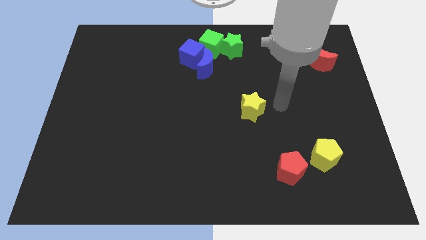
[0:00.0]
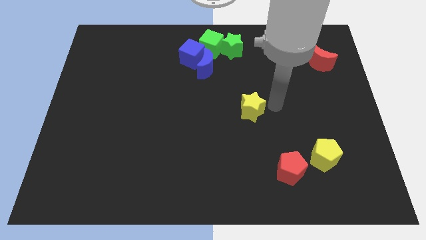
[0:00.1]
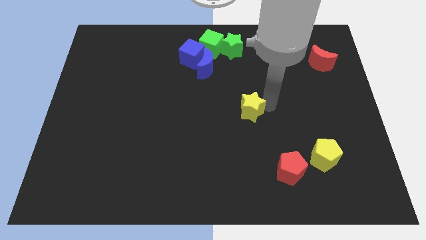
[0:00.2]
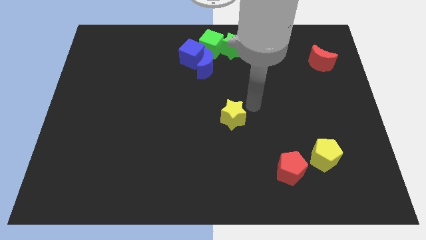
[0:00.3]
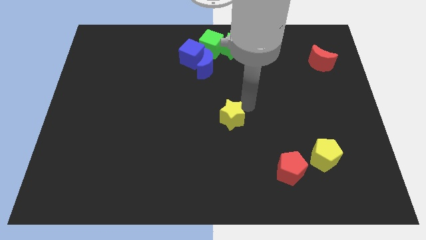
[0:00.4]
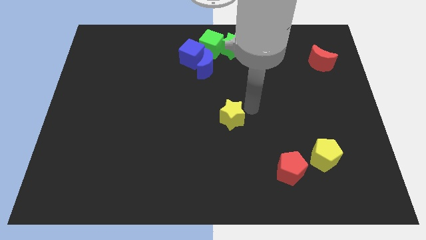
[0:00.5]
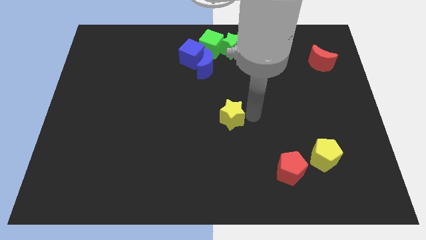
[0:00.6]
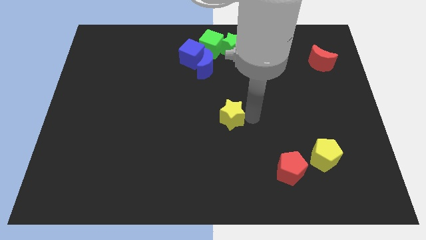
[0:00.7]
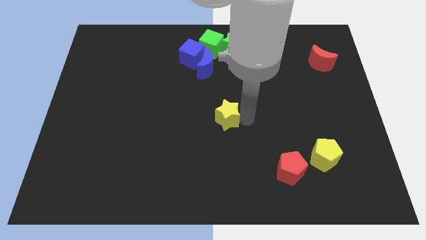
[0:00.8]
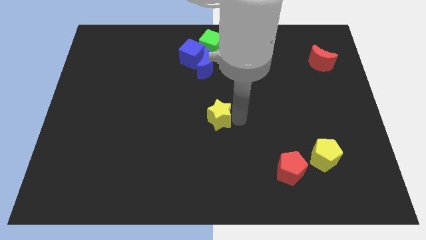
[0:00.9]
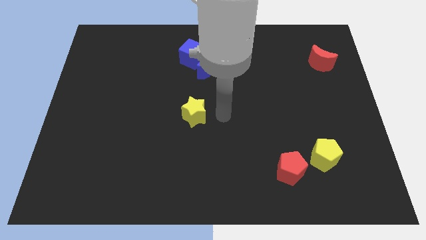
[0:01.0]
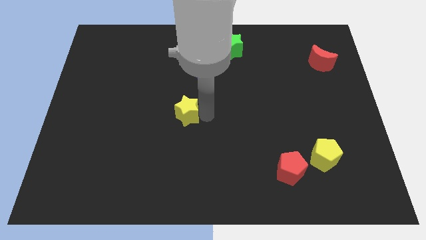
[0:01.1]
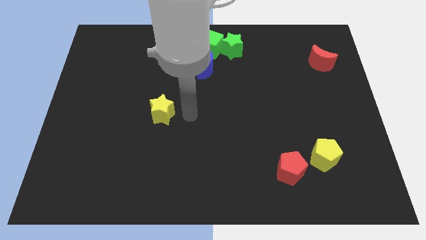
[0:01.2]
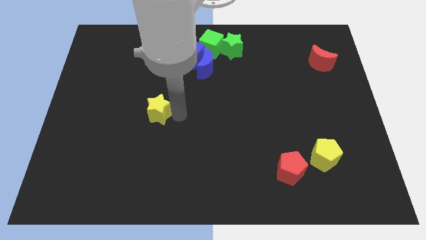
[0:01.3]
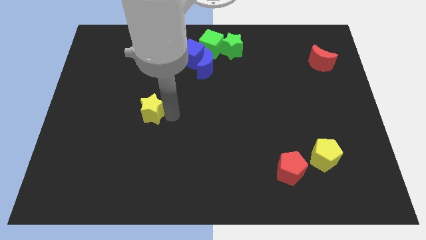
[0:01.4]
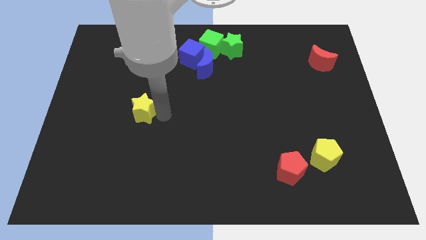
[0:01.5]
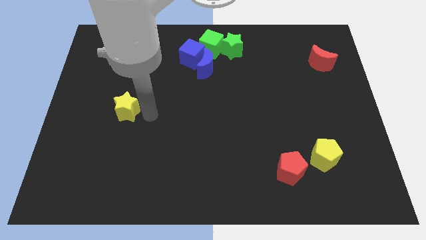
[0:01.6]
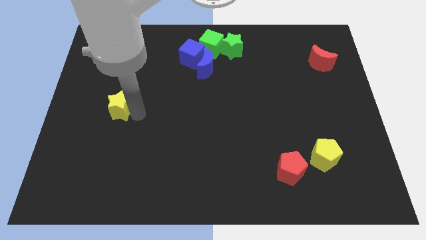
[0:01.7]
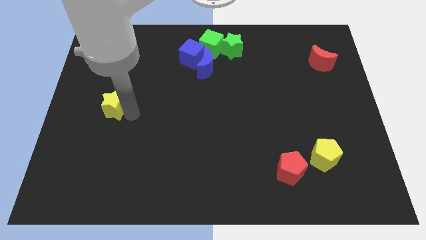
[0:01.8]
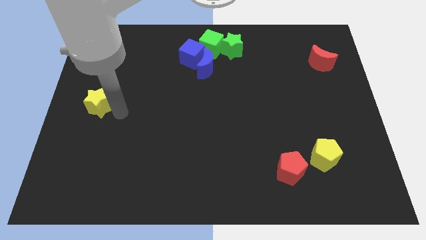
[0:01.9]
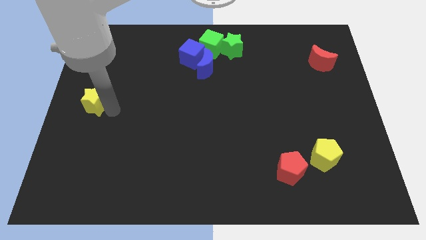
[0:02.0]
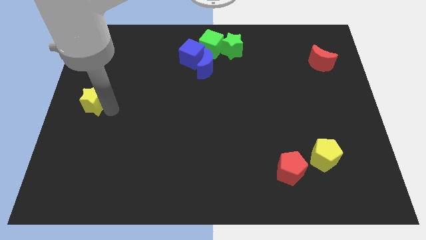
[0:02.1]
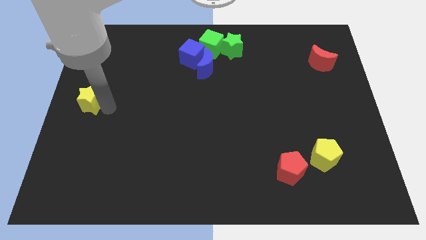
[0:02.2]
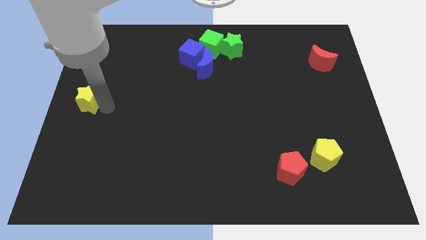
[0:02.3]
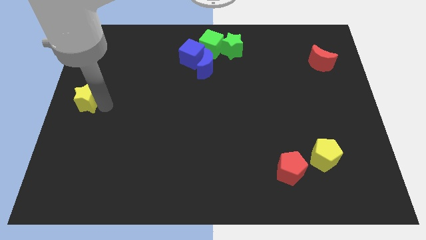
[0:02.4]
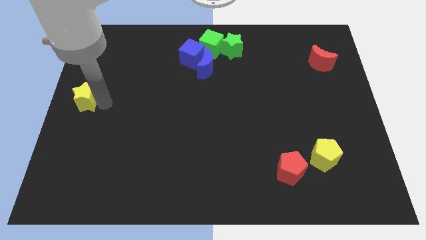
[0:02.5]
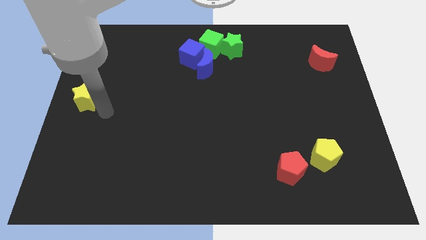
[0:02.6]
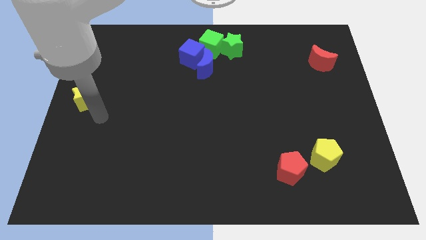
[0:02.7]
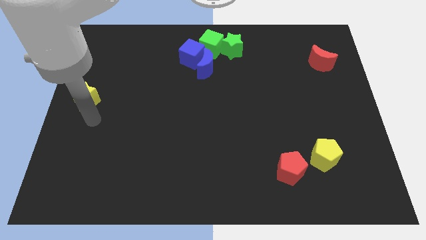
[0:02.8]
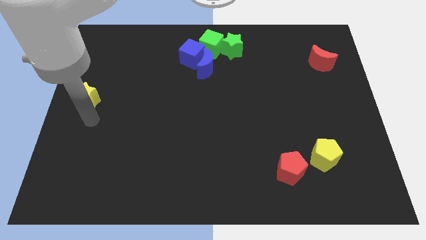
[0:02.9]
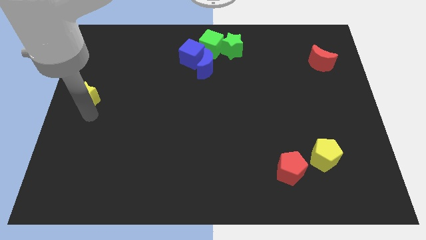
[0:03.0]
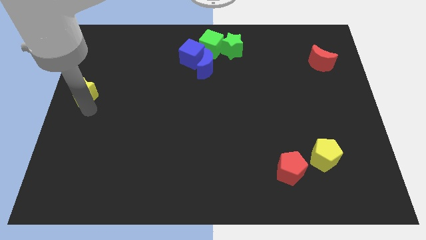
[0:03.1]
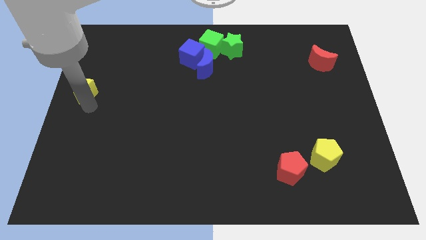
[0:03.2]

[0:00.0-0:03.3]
place yellow star at center left

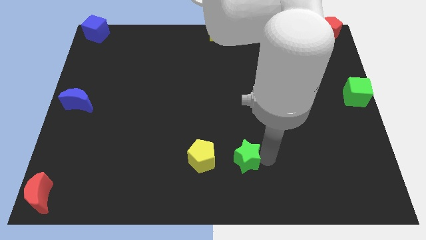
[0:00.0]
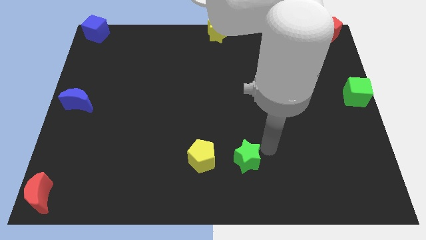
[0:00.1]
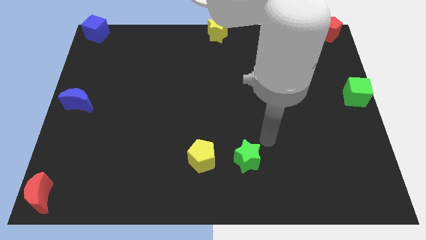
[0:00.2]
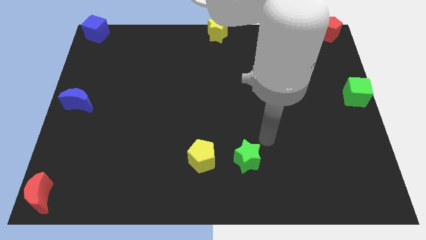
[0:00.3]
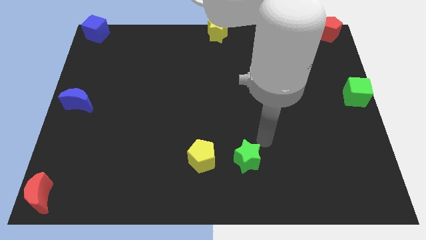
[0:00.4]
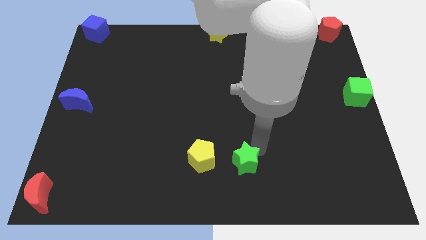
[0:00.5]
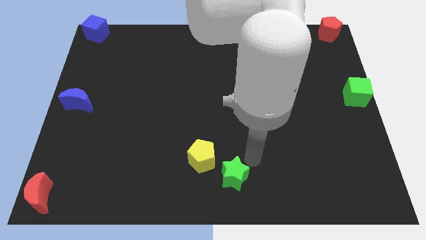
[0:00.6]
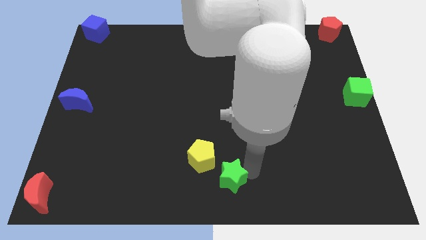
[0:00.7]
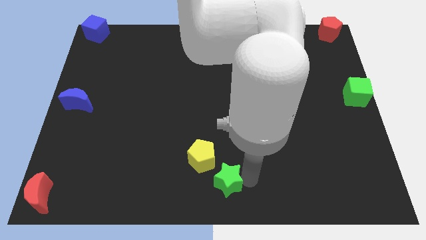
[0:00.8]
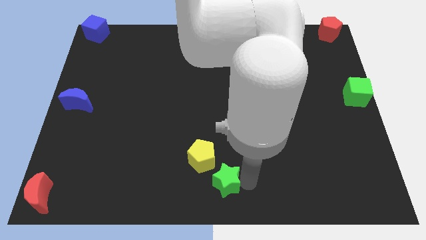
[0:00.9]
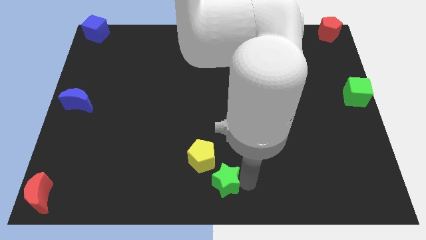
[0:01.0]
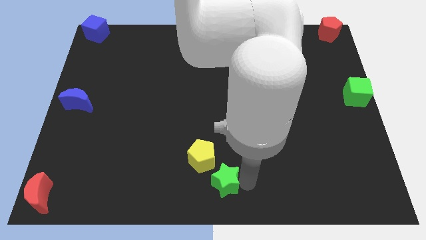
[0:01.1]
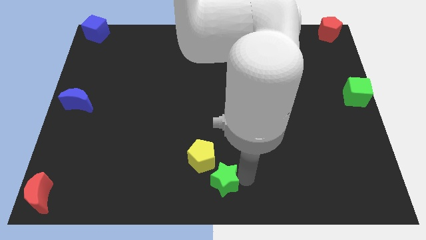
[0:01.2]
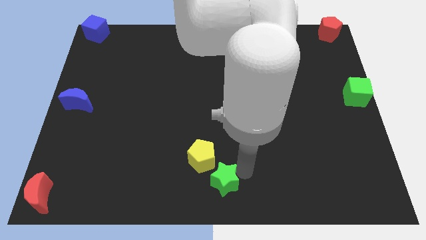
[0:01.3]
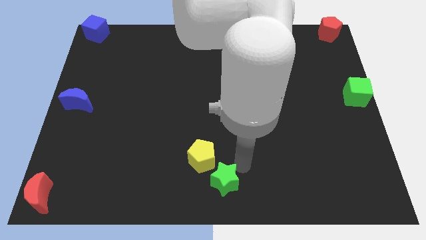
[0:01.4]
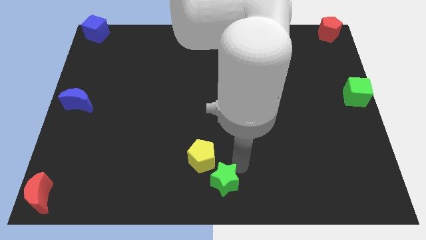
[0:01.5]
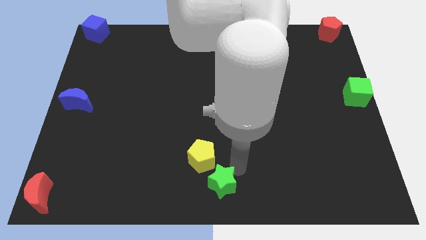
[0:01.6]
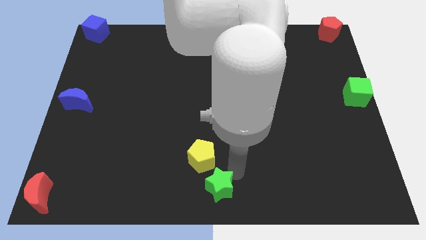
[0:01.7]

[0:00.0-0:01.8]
move the green star diagonally to the bottom right of the yellow pentagon

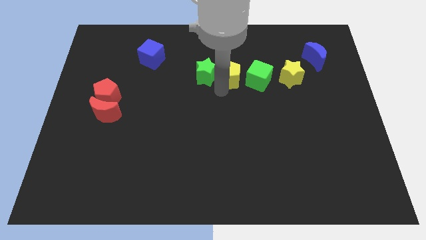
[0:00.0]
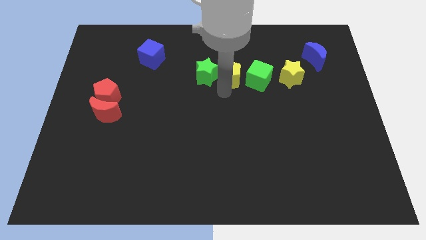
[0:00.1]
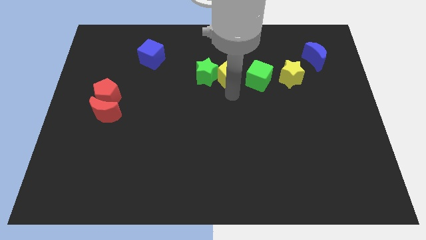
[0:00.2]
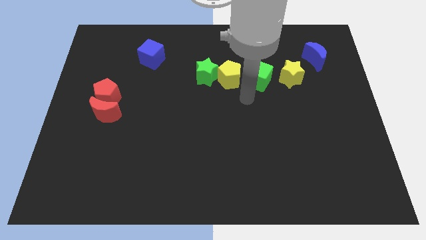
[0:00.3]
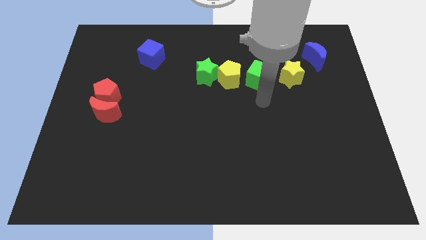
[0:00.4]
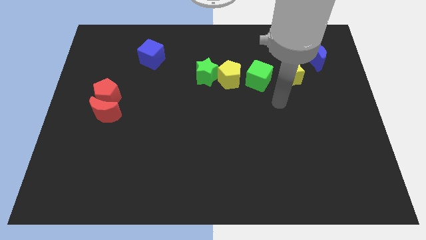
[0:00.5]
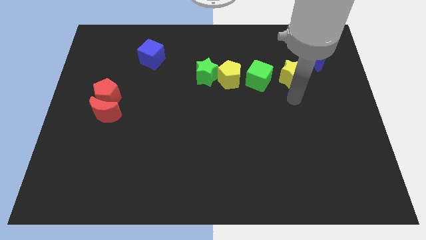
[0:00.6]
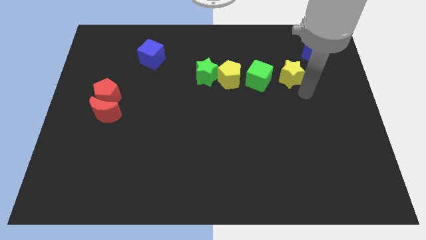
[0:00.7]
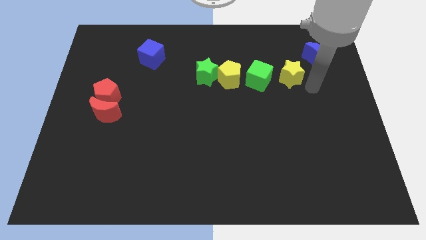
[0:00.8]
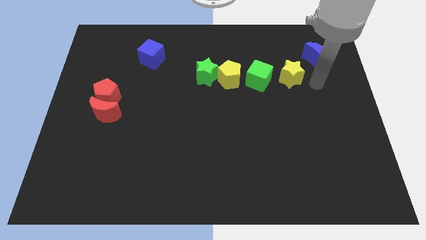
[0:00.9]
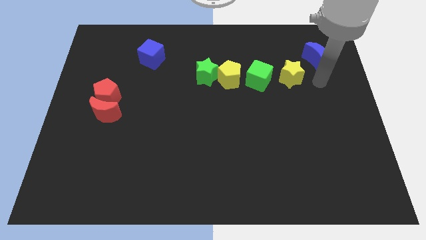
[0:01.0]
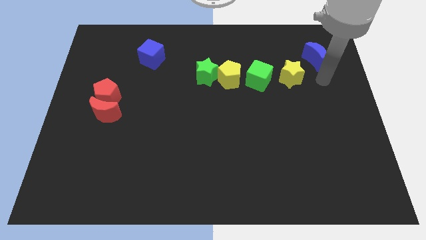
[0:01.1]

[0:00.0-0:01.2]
place your arm to the bottom side of the blue moon

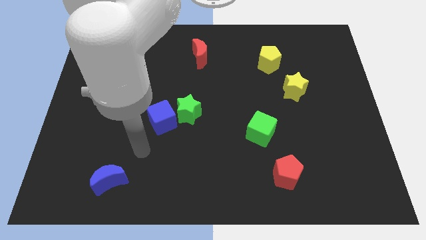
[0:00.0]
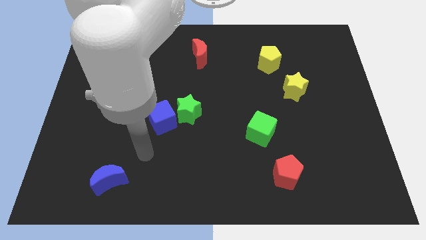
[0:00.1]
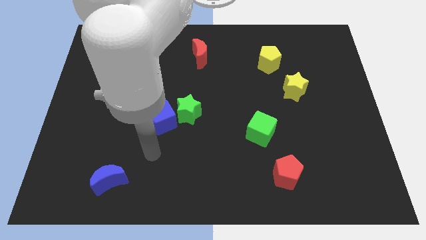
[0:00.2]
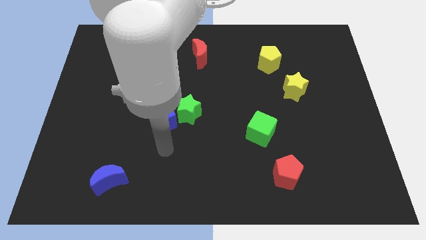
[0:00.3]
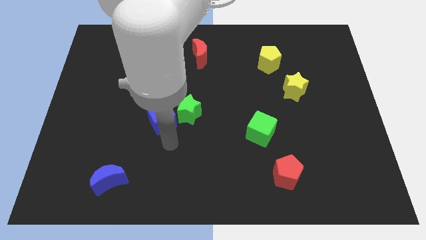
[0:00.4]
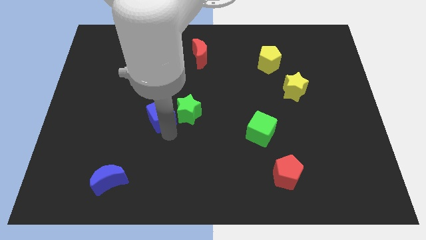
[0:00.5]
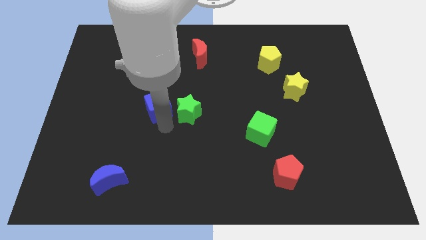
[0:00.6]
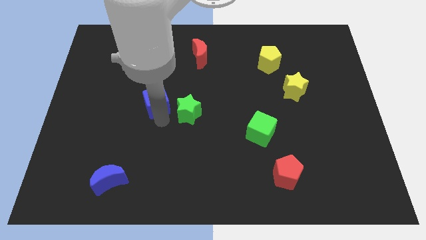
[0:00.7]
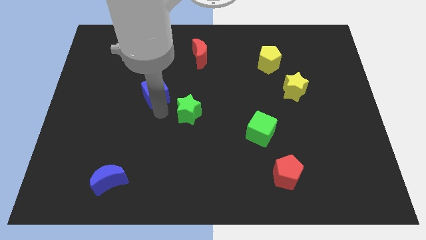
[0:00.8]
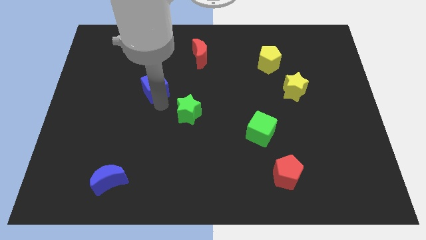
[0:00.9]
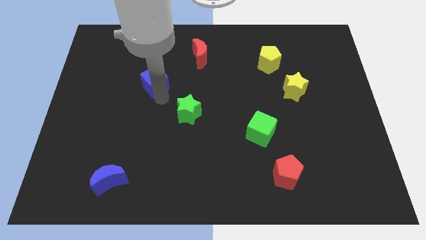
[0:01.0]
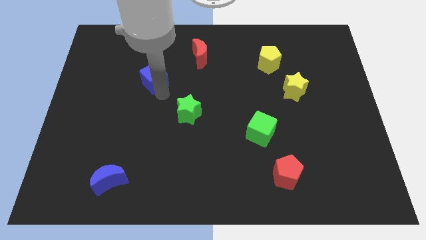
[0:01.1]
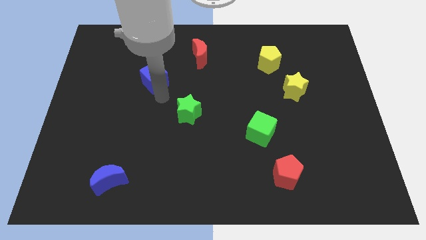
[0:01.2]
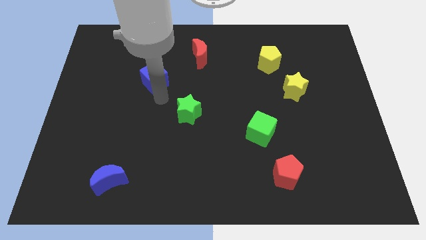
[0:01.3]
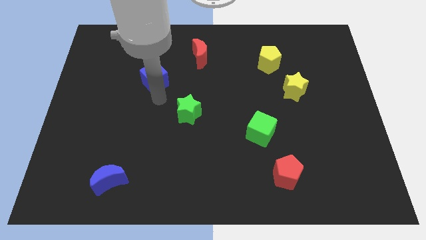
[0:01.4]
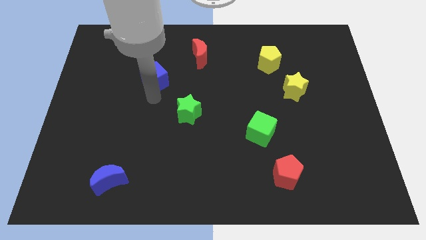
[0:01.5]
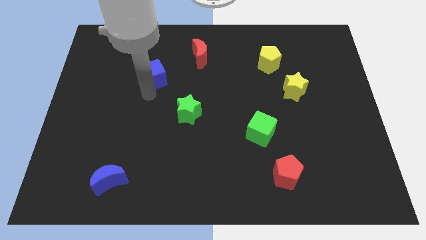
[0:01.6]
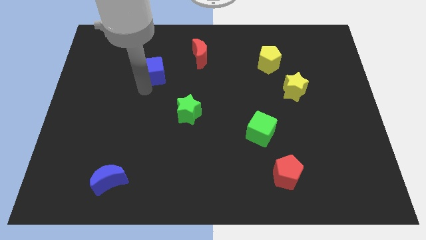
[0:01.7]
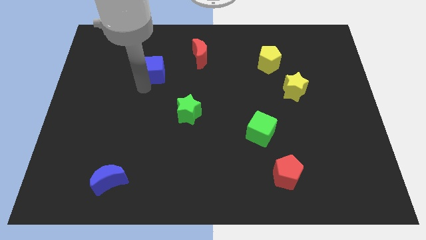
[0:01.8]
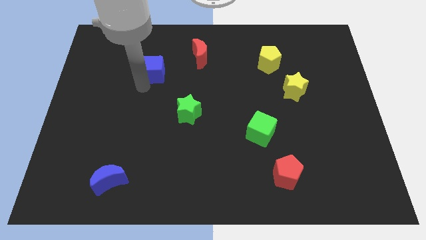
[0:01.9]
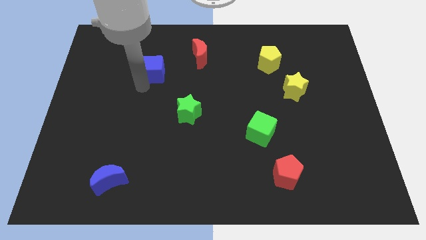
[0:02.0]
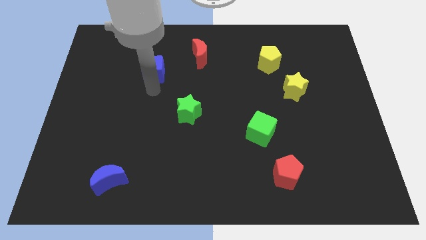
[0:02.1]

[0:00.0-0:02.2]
place blue cube diagonal to red moon

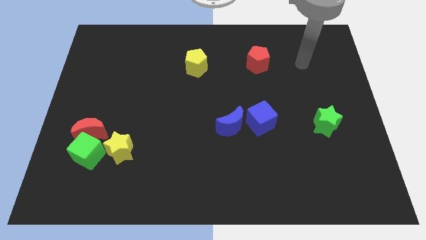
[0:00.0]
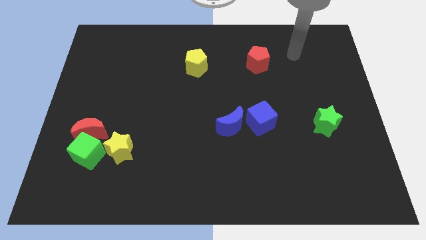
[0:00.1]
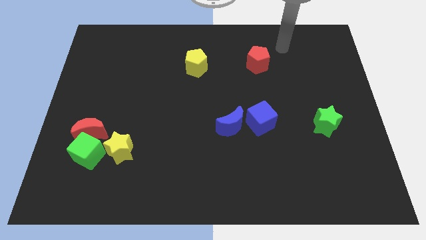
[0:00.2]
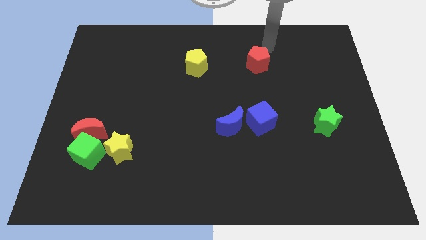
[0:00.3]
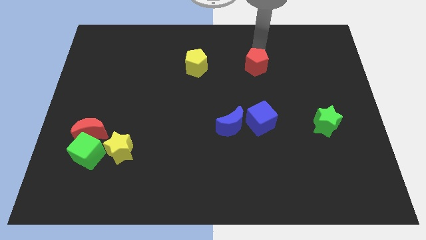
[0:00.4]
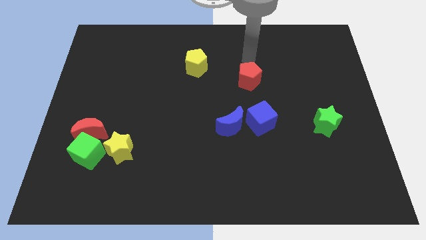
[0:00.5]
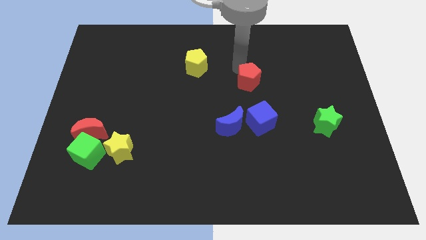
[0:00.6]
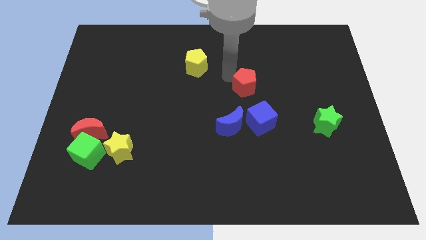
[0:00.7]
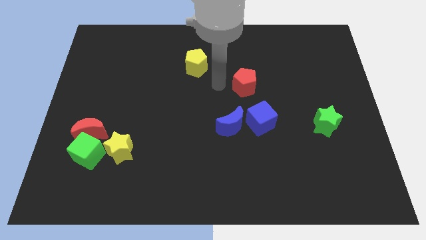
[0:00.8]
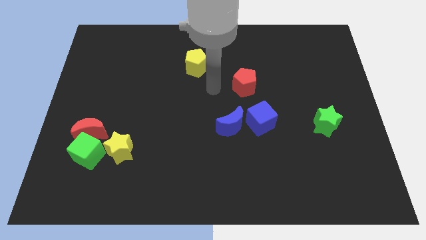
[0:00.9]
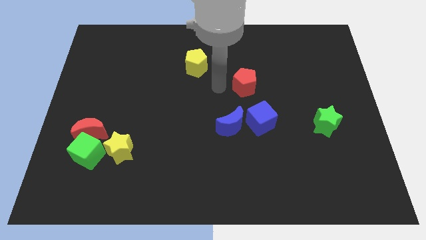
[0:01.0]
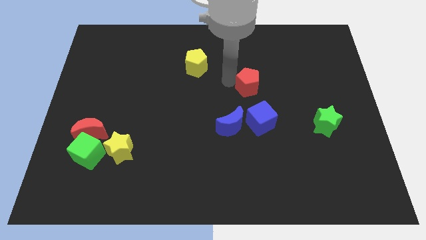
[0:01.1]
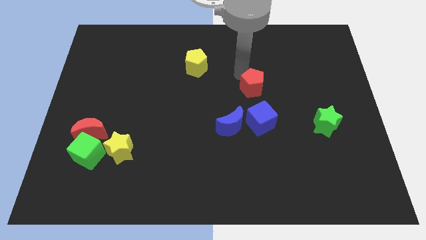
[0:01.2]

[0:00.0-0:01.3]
push the red pentagon towards the bottom
